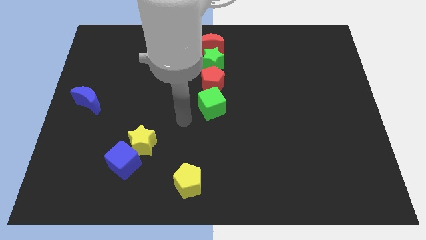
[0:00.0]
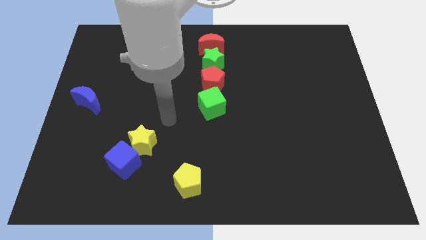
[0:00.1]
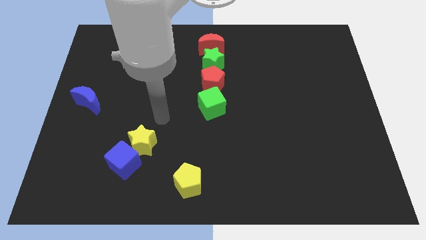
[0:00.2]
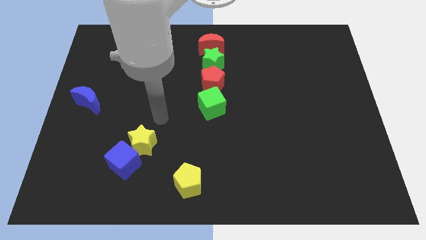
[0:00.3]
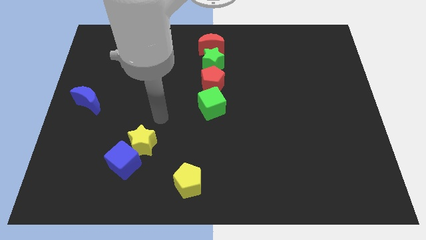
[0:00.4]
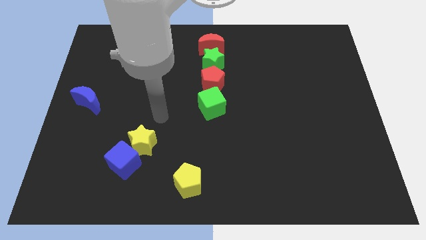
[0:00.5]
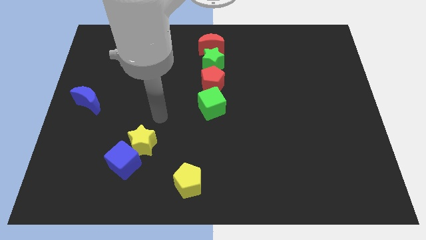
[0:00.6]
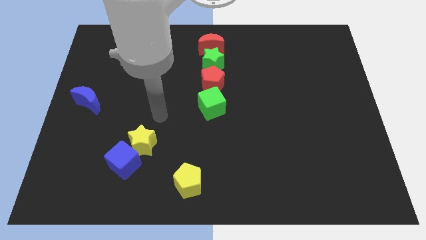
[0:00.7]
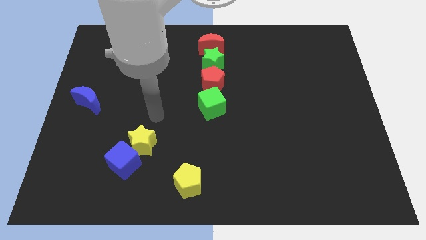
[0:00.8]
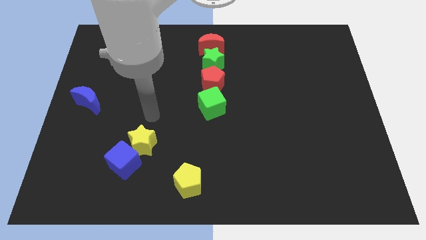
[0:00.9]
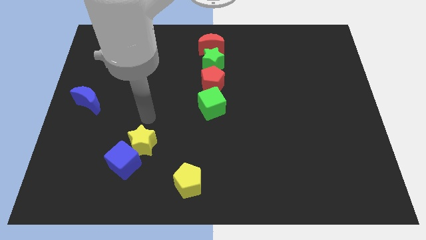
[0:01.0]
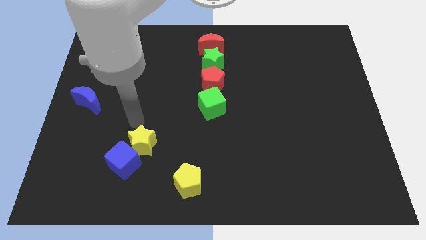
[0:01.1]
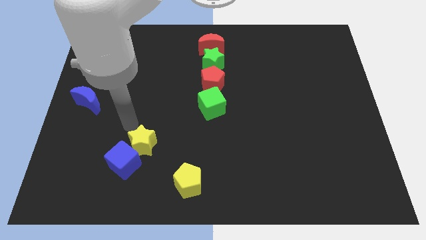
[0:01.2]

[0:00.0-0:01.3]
place your arm at the top of the yellow star

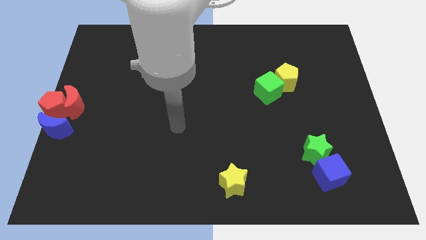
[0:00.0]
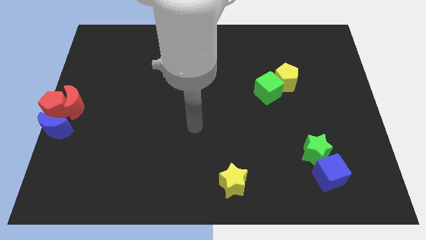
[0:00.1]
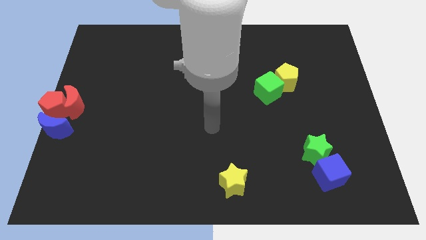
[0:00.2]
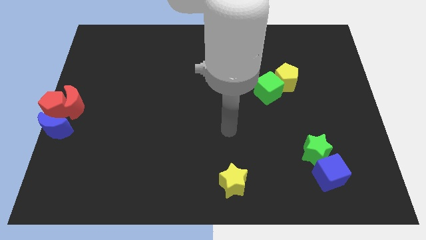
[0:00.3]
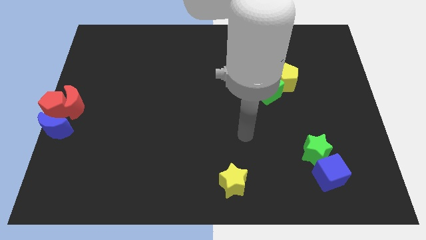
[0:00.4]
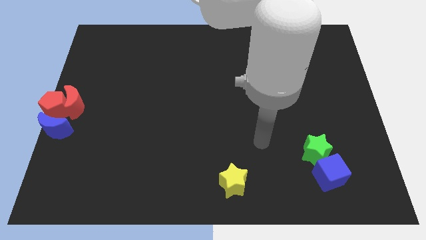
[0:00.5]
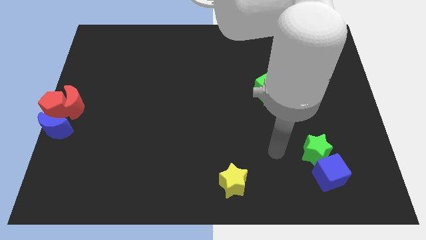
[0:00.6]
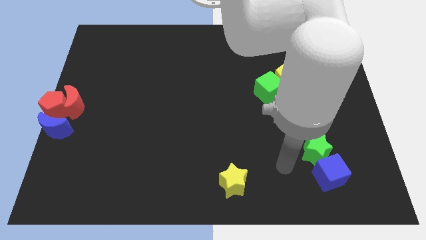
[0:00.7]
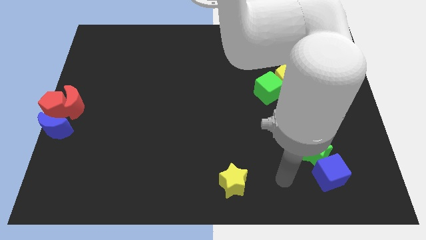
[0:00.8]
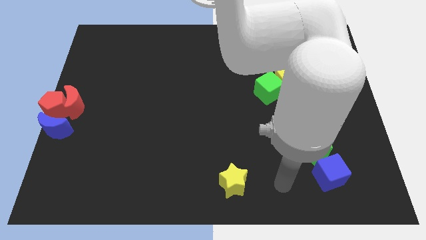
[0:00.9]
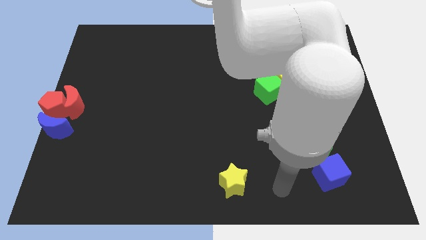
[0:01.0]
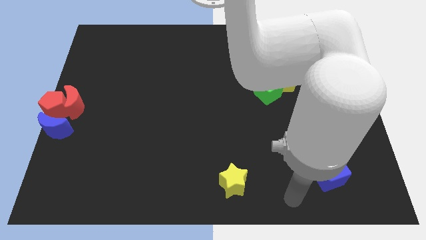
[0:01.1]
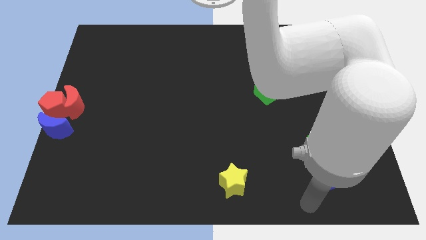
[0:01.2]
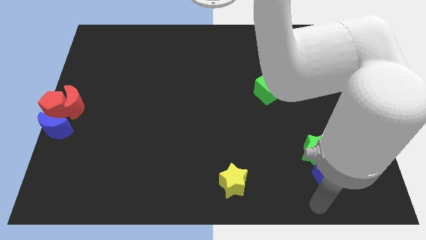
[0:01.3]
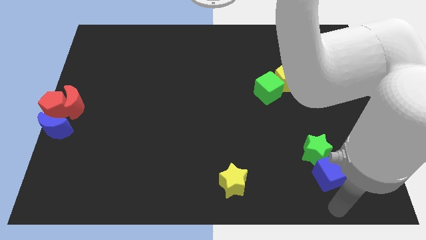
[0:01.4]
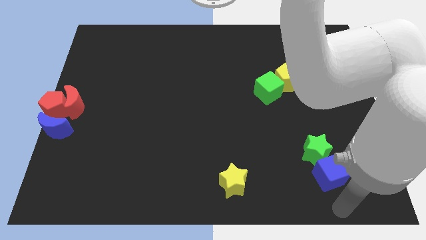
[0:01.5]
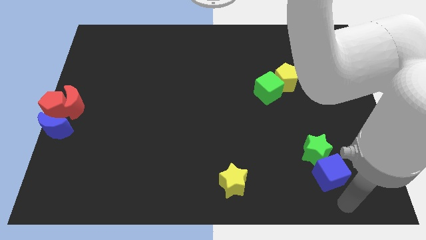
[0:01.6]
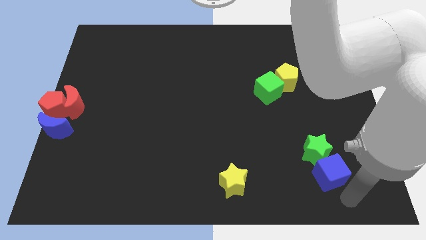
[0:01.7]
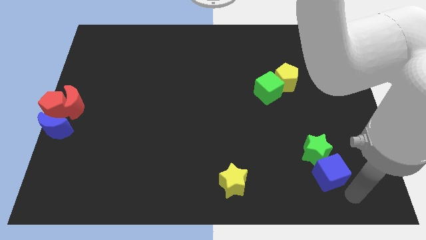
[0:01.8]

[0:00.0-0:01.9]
move your arm below the blue cube

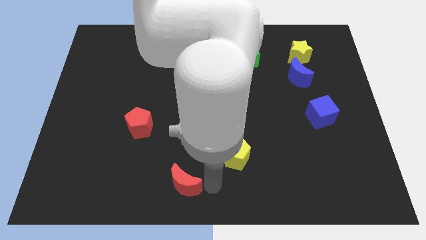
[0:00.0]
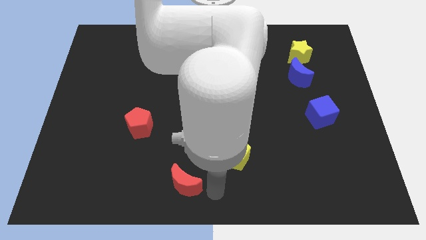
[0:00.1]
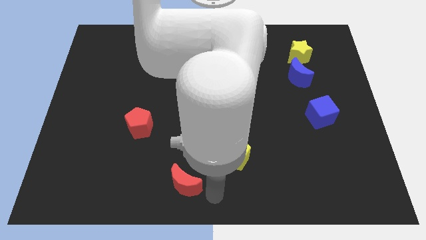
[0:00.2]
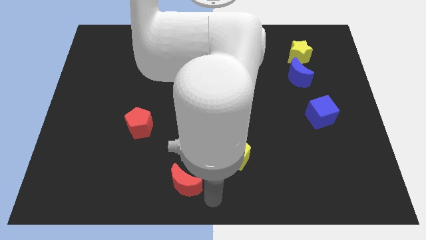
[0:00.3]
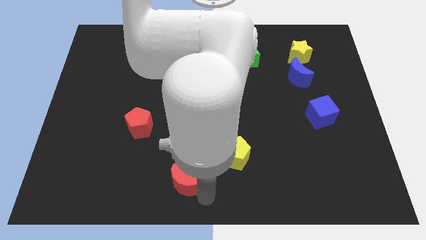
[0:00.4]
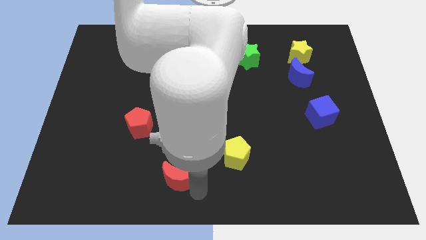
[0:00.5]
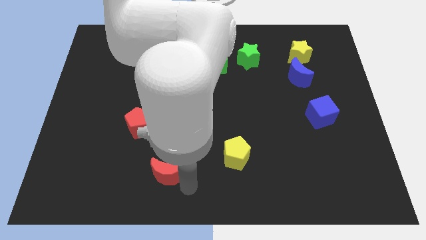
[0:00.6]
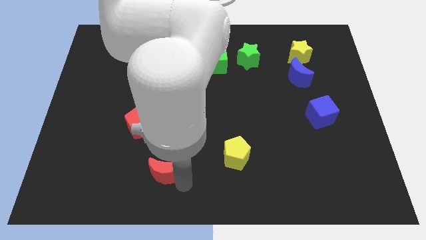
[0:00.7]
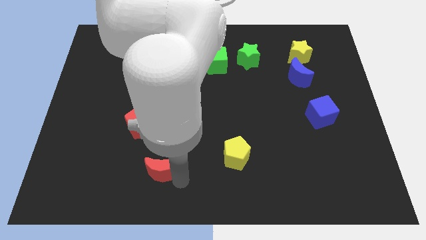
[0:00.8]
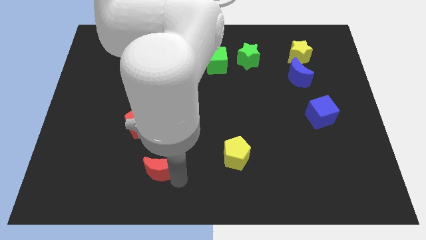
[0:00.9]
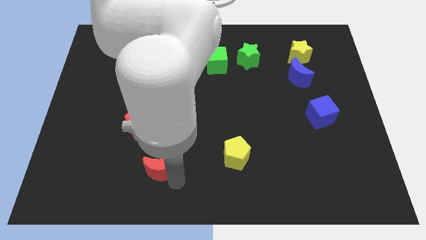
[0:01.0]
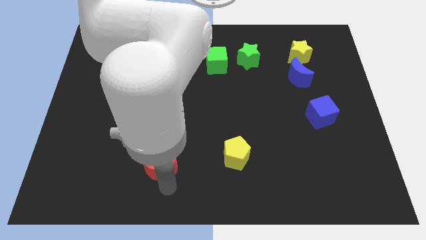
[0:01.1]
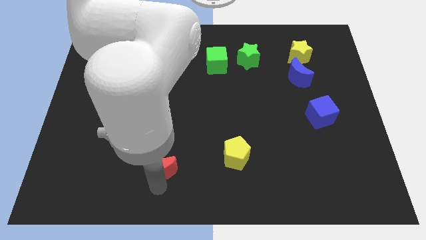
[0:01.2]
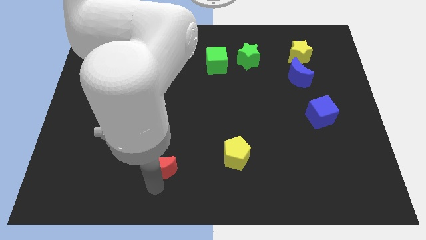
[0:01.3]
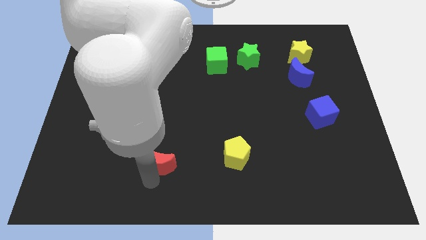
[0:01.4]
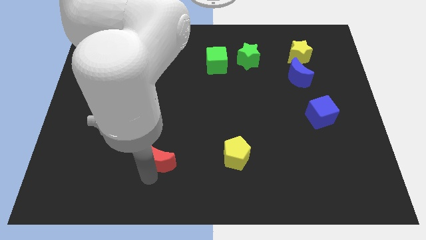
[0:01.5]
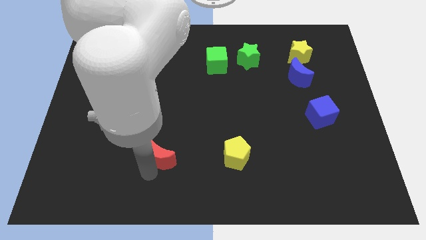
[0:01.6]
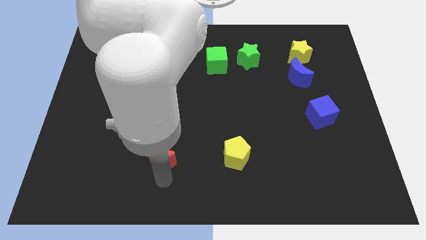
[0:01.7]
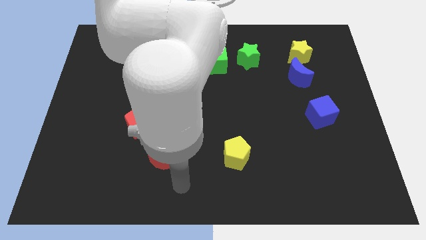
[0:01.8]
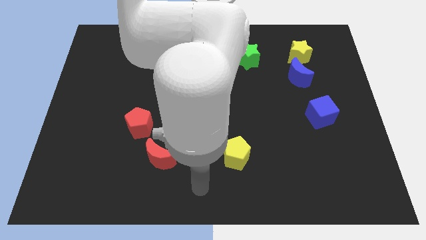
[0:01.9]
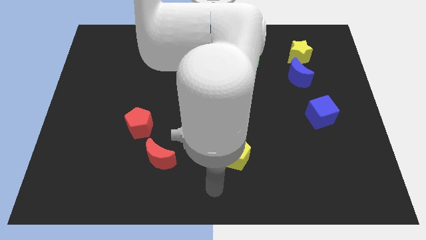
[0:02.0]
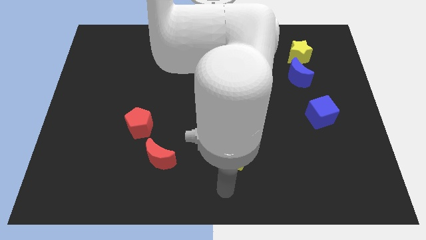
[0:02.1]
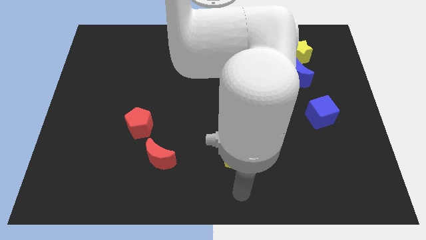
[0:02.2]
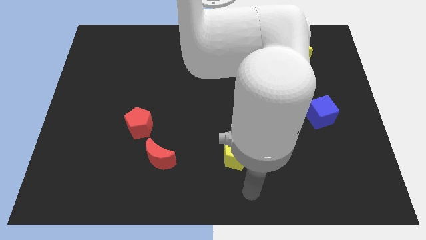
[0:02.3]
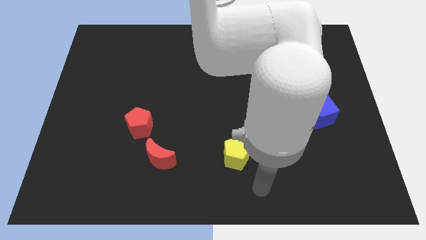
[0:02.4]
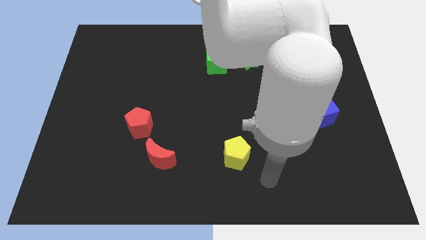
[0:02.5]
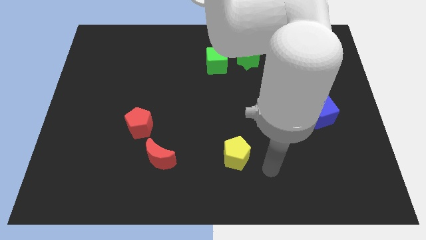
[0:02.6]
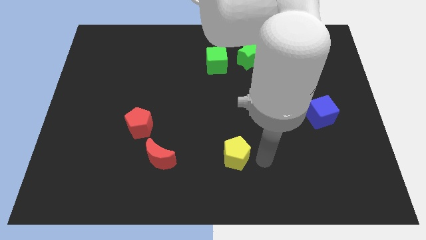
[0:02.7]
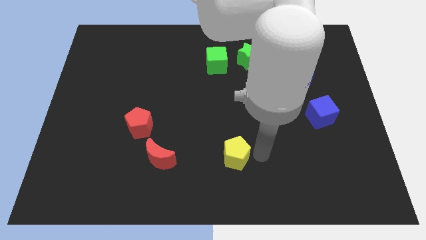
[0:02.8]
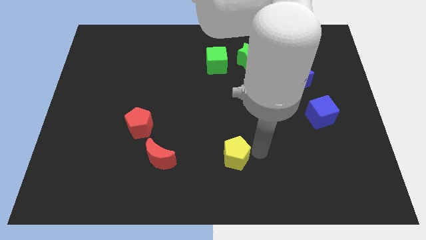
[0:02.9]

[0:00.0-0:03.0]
move the red moon close to red penatgon

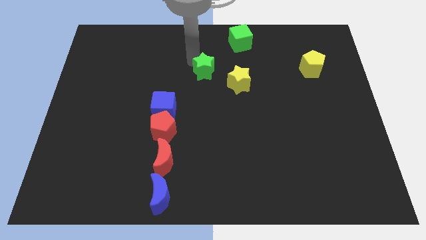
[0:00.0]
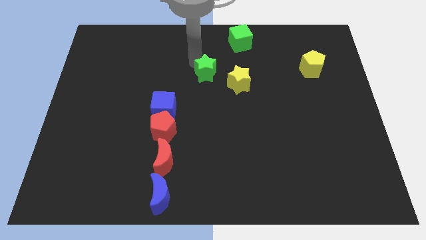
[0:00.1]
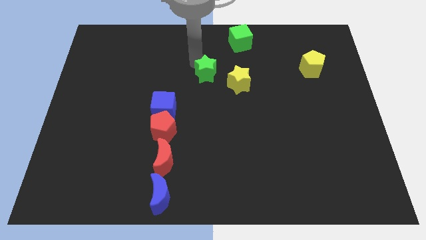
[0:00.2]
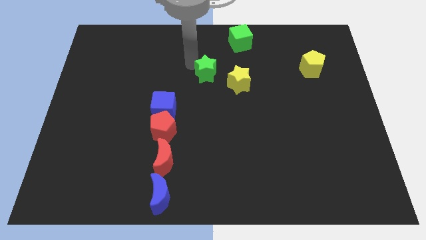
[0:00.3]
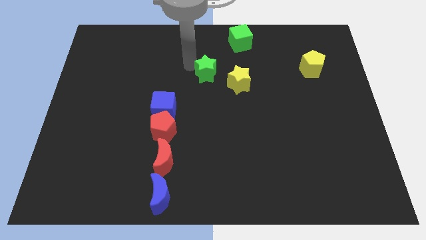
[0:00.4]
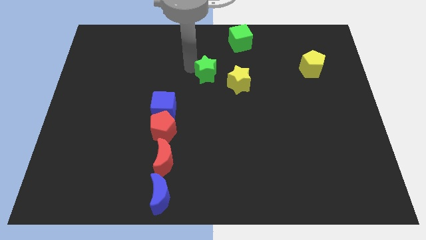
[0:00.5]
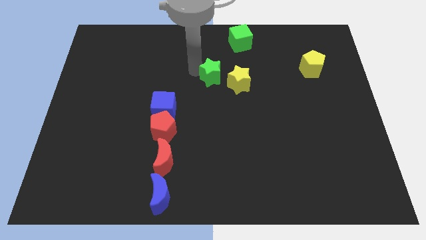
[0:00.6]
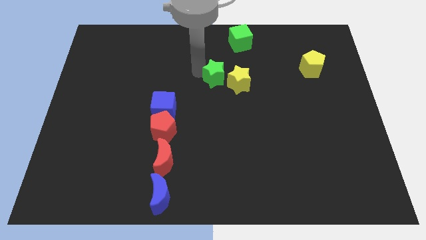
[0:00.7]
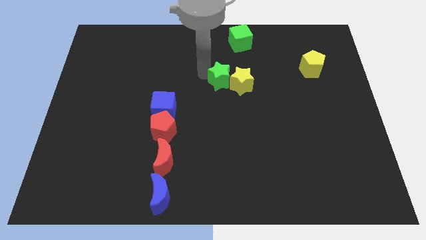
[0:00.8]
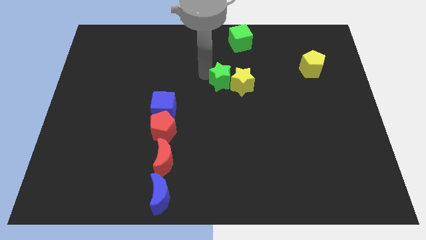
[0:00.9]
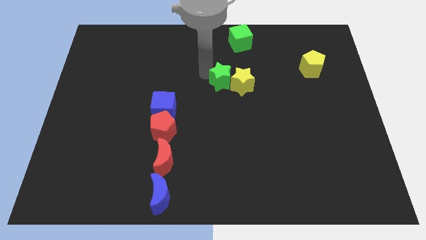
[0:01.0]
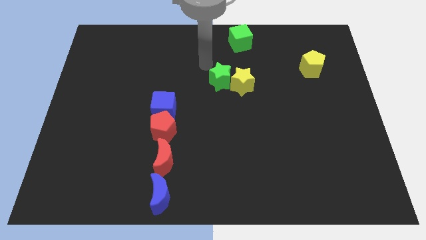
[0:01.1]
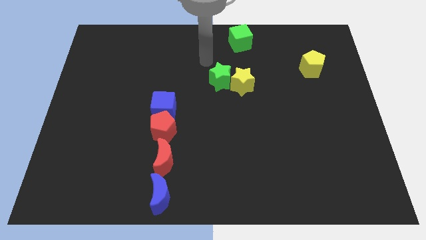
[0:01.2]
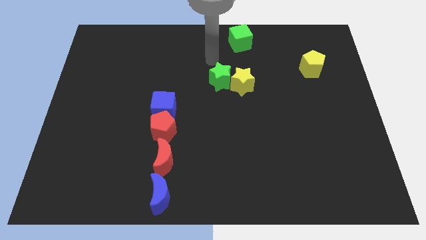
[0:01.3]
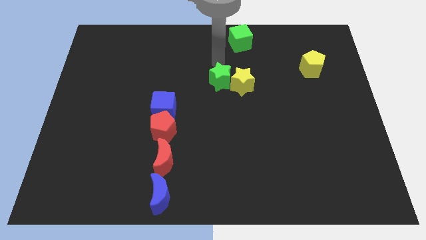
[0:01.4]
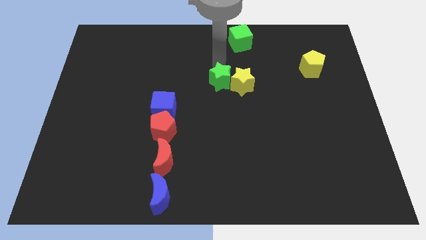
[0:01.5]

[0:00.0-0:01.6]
place green star close to left to the yellow star

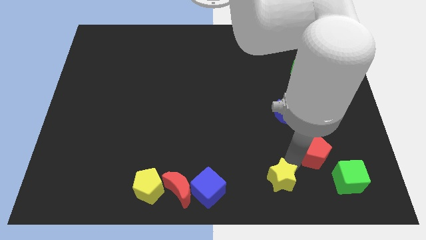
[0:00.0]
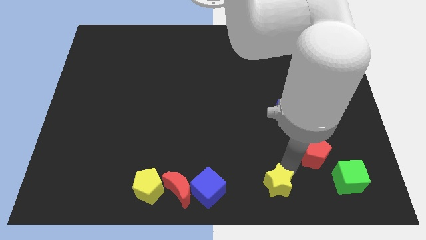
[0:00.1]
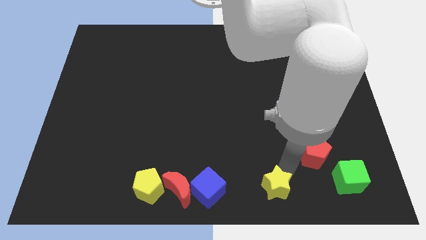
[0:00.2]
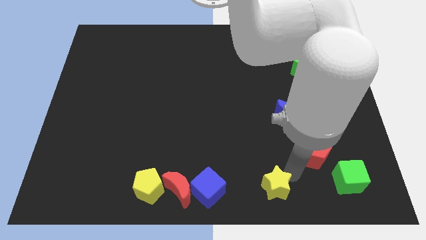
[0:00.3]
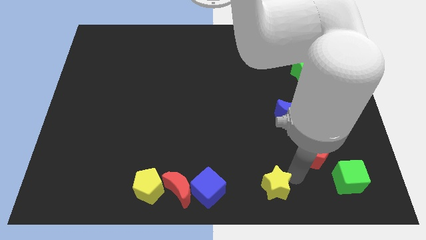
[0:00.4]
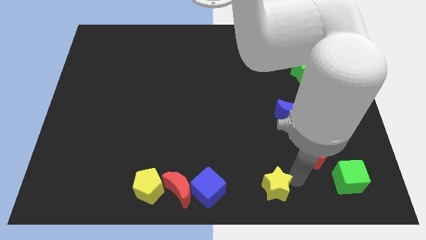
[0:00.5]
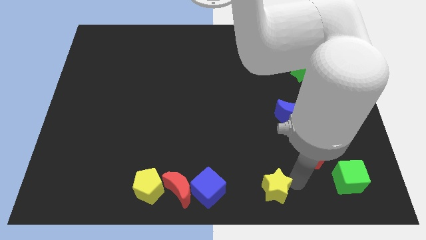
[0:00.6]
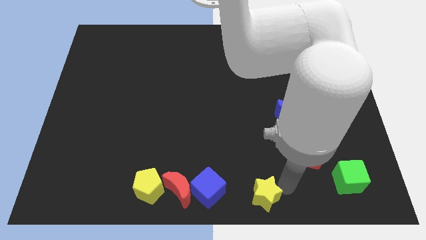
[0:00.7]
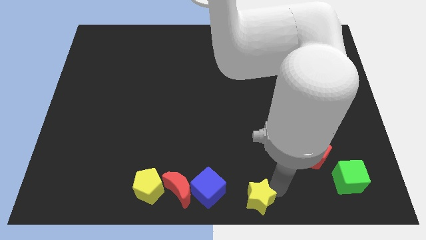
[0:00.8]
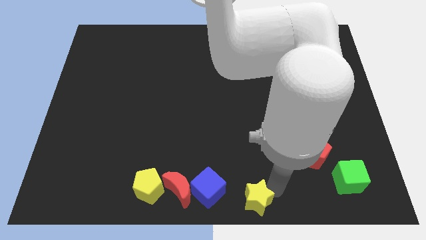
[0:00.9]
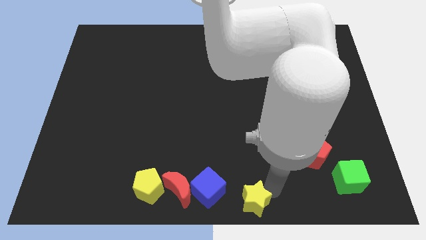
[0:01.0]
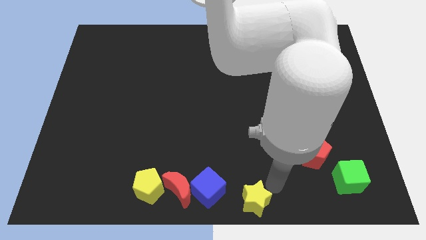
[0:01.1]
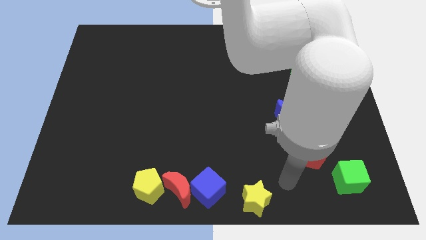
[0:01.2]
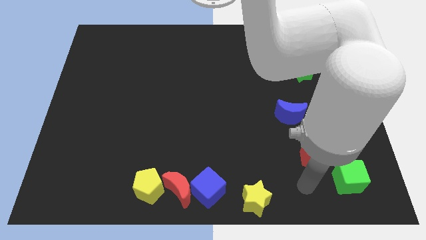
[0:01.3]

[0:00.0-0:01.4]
move the yellow star away from the red pentagon
